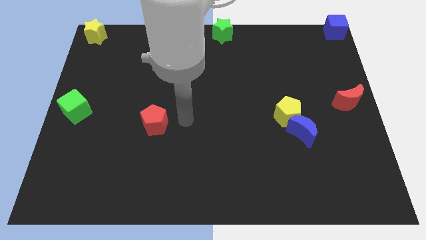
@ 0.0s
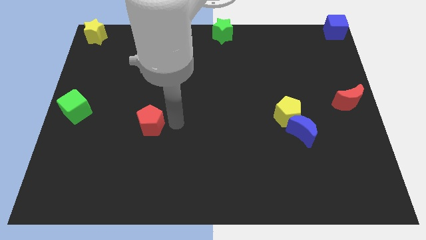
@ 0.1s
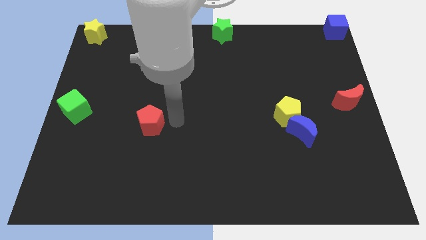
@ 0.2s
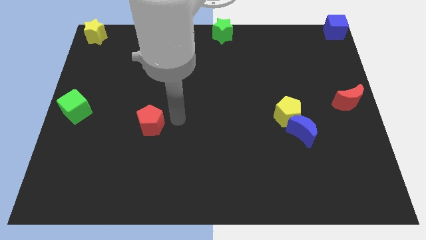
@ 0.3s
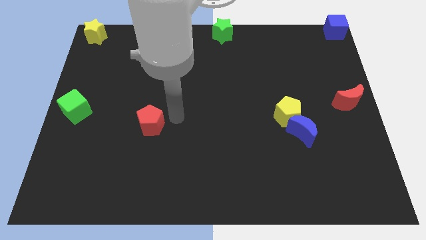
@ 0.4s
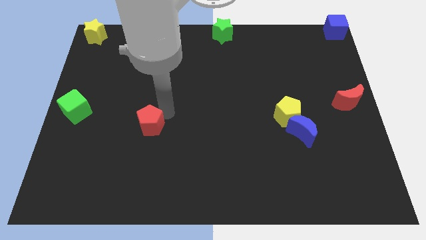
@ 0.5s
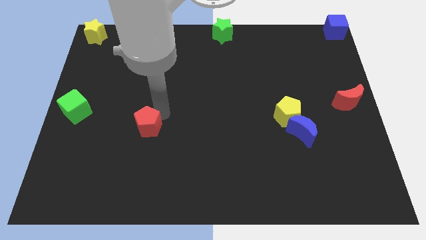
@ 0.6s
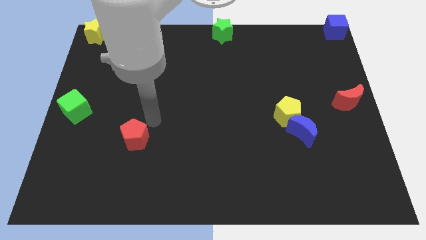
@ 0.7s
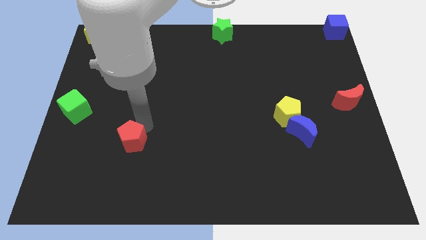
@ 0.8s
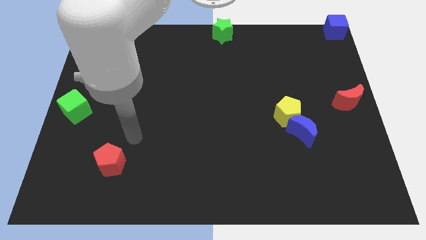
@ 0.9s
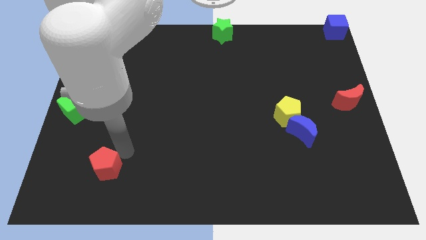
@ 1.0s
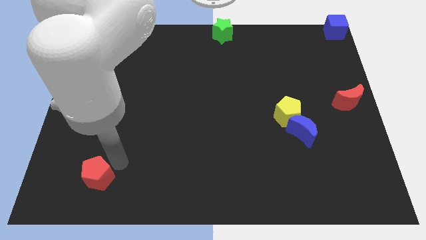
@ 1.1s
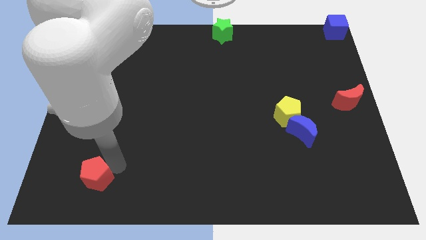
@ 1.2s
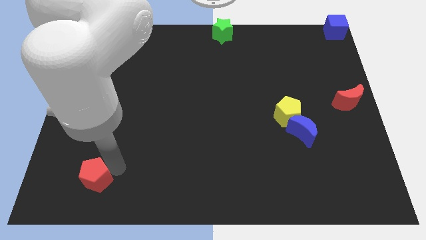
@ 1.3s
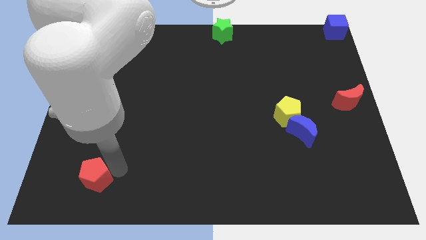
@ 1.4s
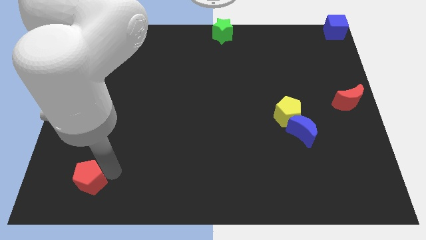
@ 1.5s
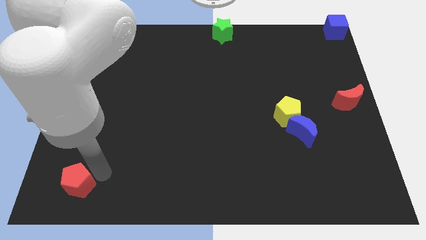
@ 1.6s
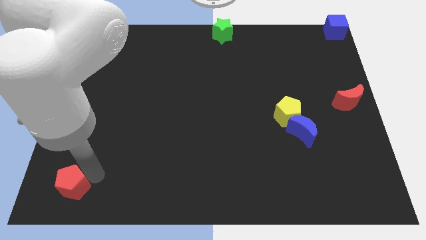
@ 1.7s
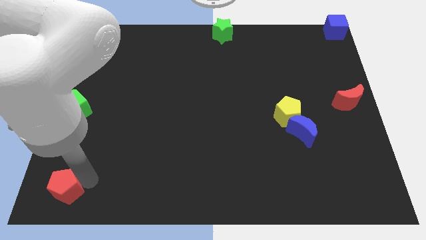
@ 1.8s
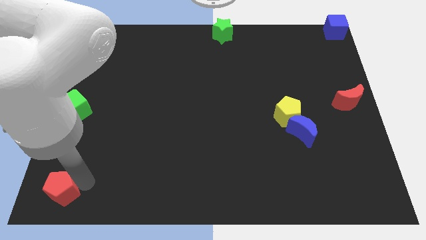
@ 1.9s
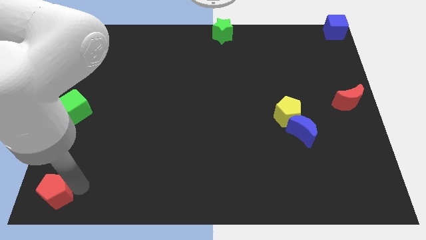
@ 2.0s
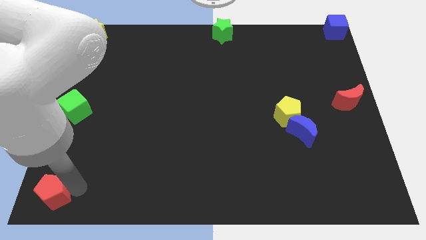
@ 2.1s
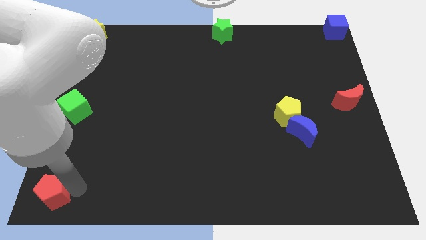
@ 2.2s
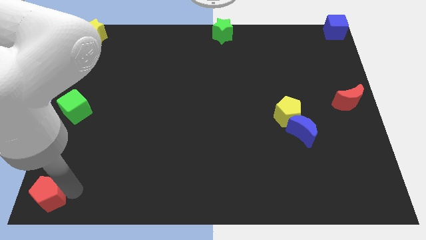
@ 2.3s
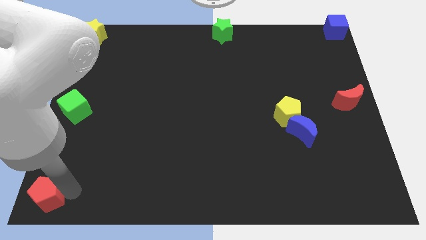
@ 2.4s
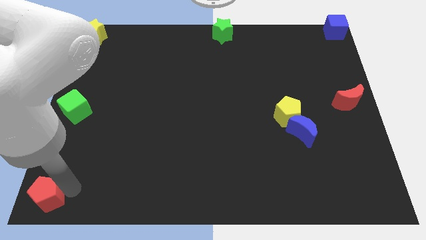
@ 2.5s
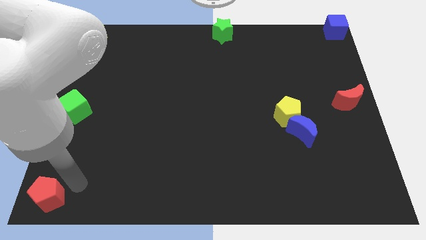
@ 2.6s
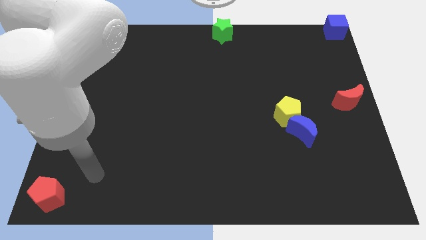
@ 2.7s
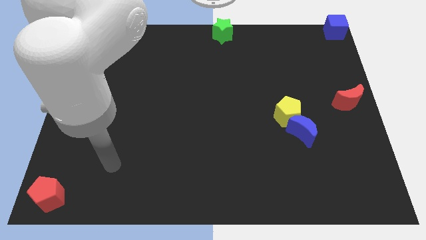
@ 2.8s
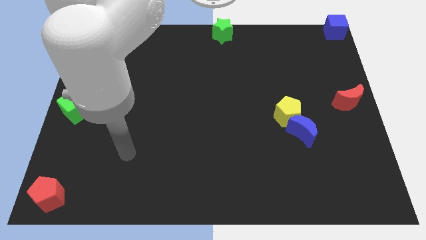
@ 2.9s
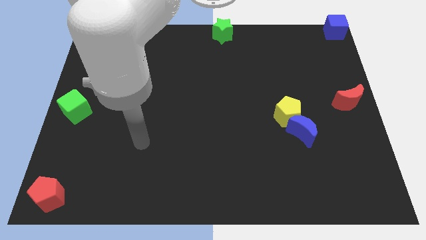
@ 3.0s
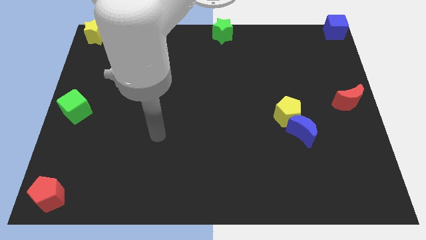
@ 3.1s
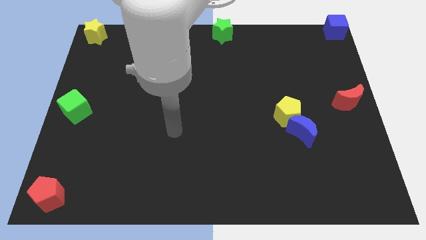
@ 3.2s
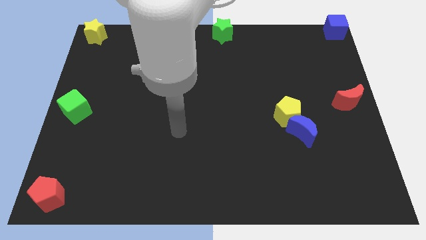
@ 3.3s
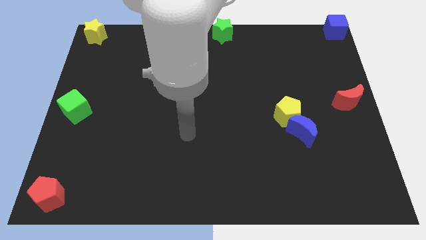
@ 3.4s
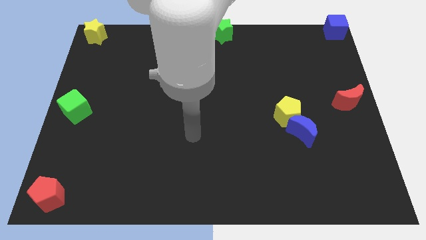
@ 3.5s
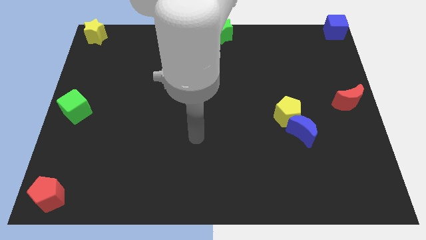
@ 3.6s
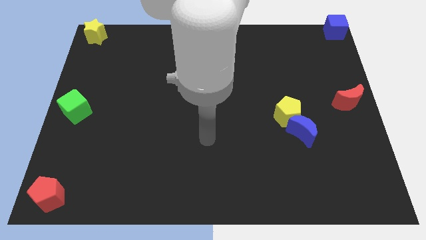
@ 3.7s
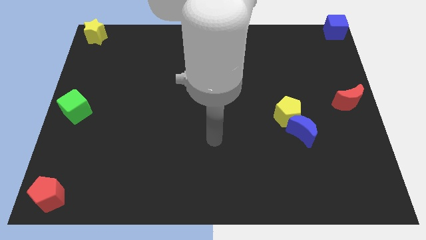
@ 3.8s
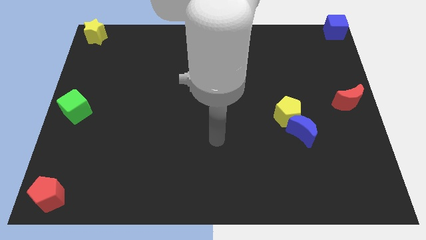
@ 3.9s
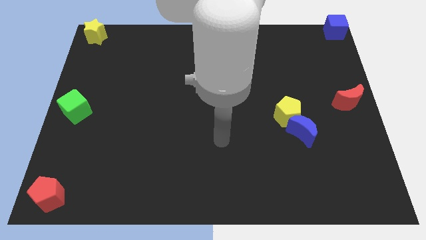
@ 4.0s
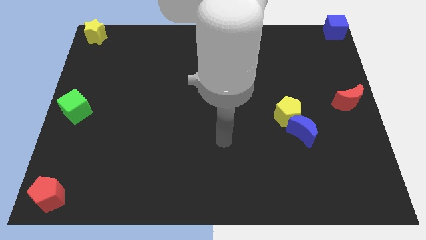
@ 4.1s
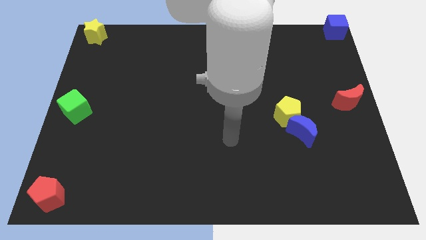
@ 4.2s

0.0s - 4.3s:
place the red pentagon to the bottom left of the board

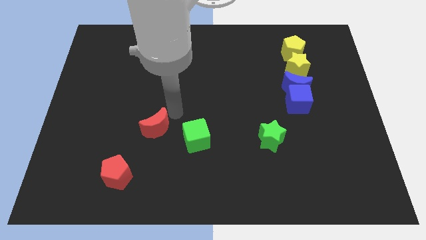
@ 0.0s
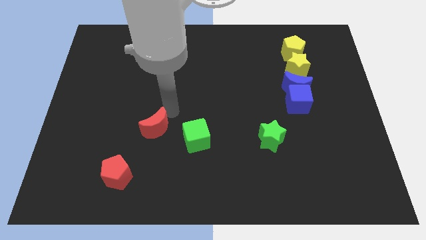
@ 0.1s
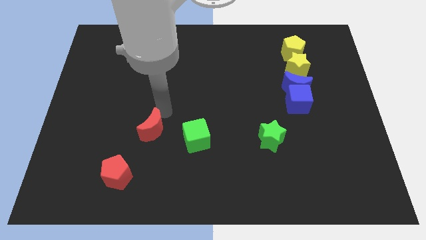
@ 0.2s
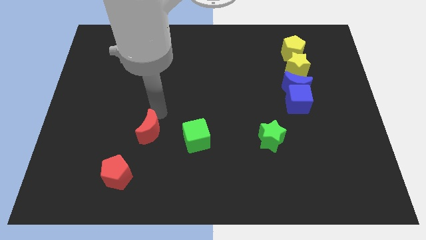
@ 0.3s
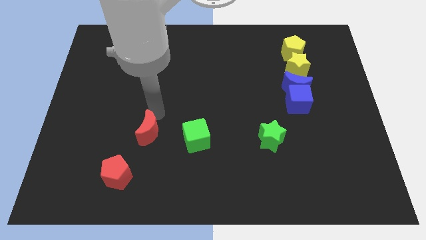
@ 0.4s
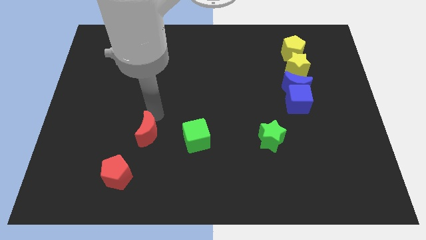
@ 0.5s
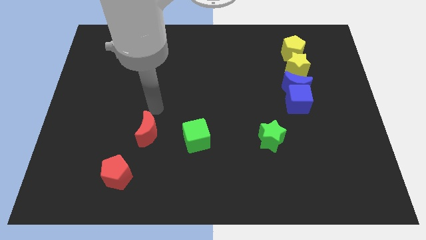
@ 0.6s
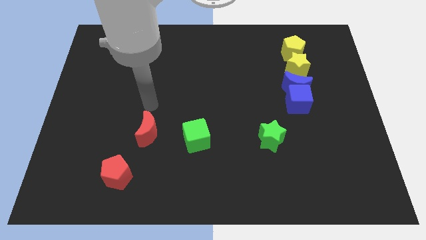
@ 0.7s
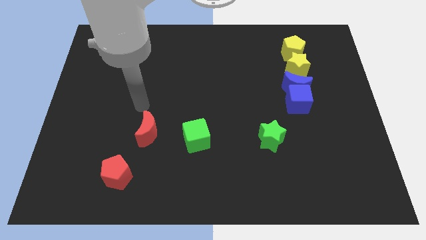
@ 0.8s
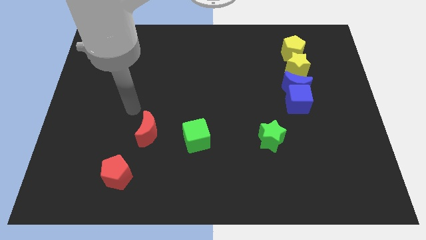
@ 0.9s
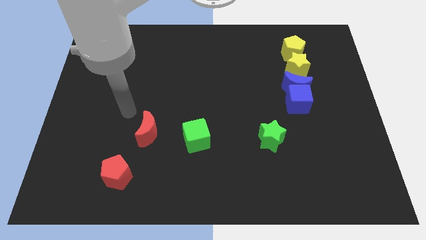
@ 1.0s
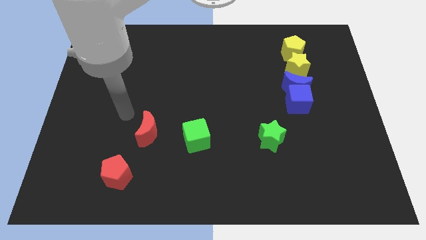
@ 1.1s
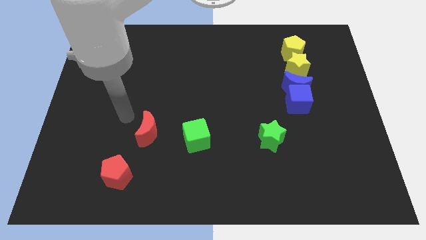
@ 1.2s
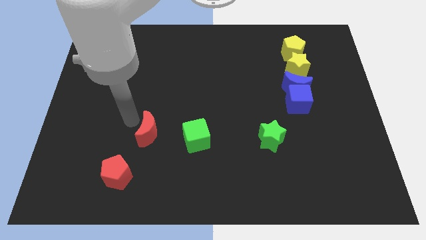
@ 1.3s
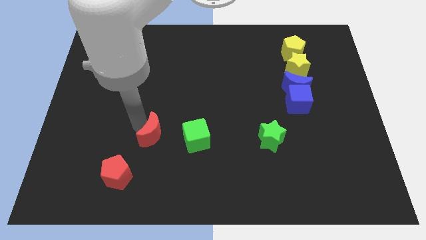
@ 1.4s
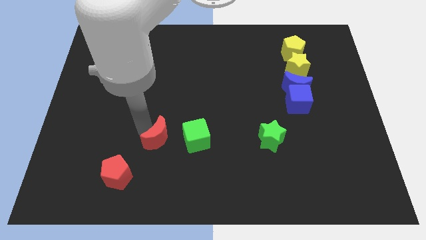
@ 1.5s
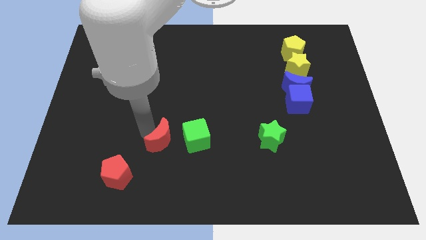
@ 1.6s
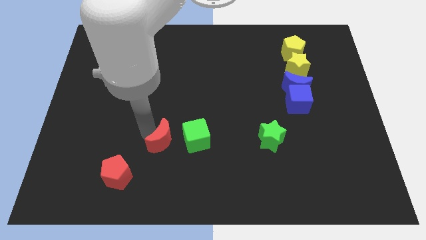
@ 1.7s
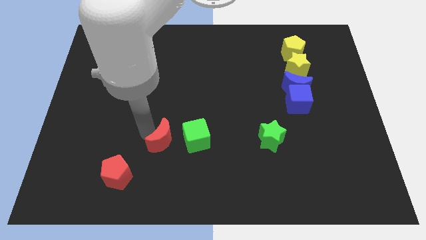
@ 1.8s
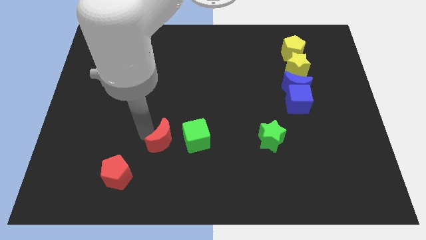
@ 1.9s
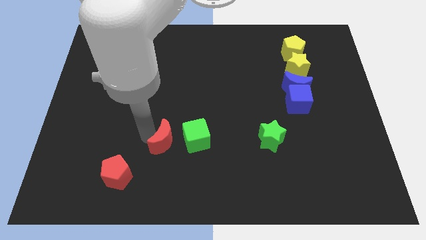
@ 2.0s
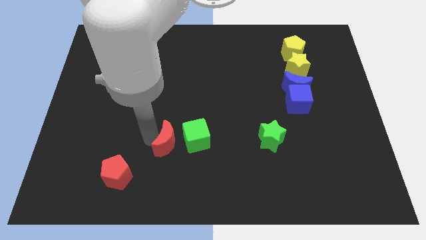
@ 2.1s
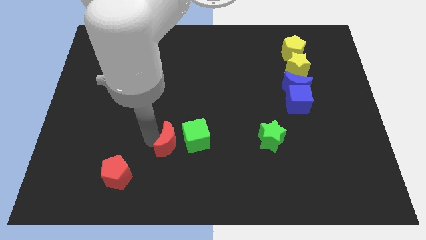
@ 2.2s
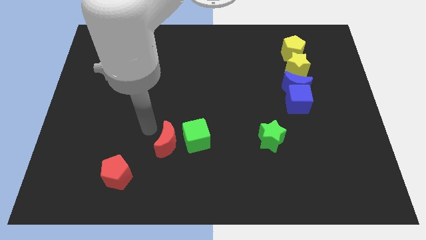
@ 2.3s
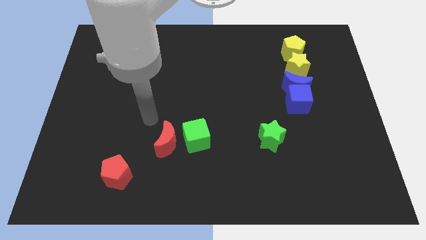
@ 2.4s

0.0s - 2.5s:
place the red moon towards the left side of the green cube

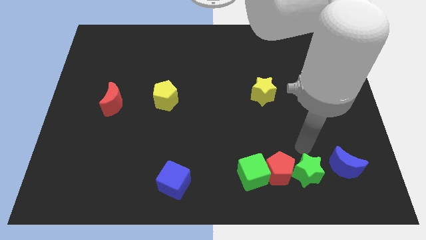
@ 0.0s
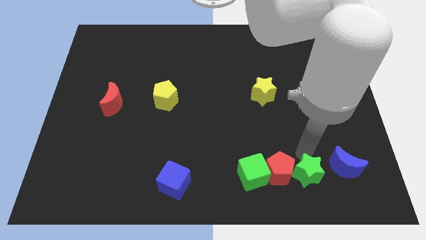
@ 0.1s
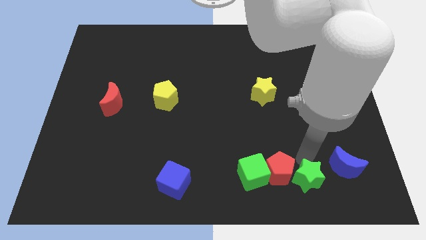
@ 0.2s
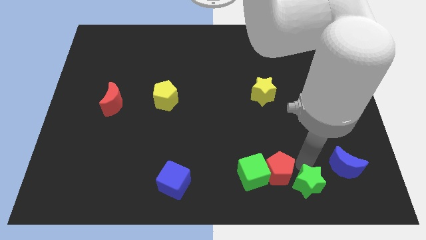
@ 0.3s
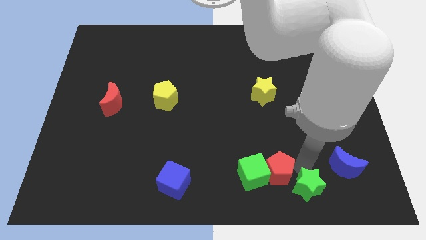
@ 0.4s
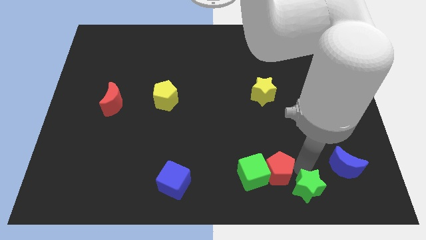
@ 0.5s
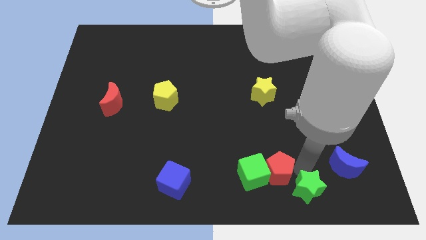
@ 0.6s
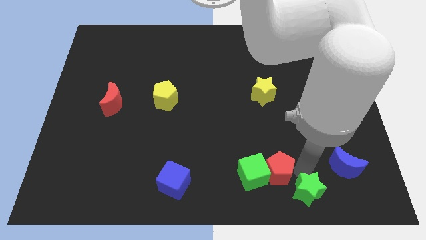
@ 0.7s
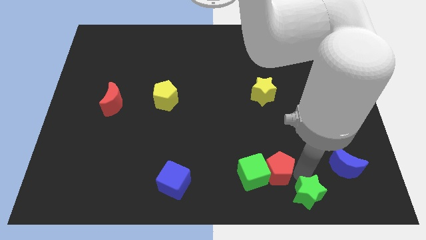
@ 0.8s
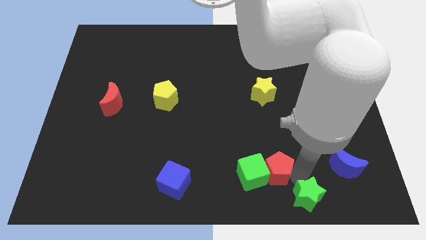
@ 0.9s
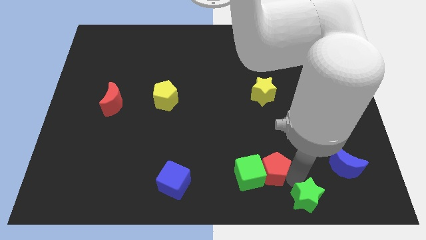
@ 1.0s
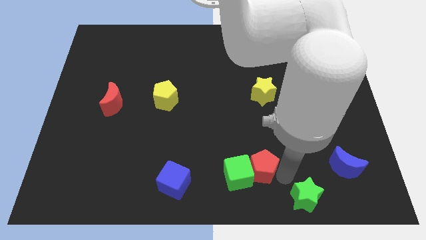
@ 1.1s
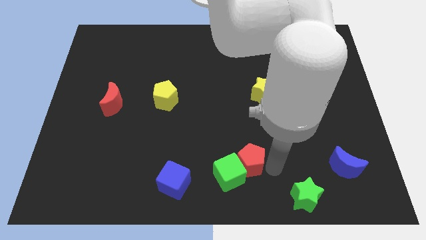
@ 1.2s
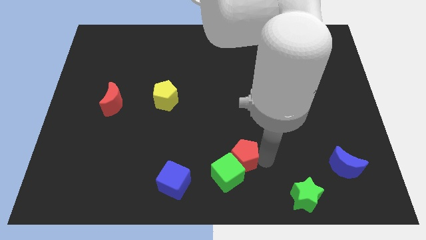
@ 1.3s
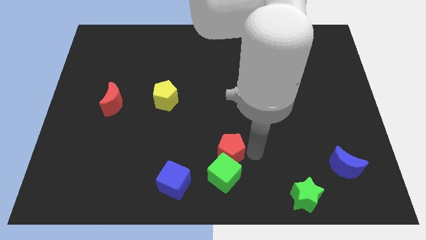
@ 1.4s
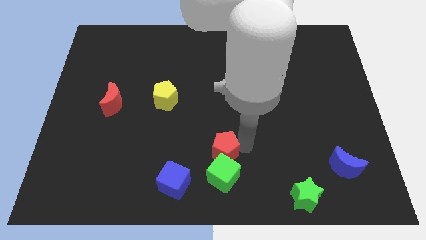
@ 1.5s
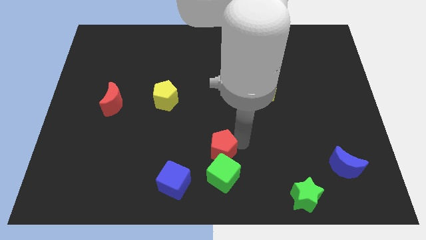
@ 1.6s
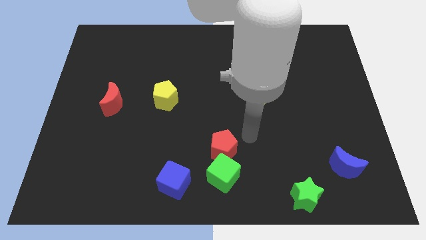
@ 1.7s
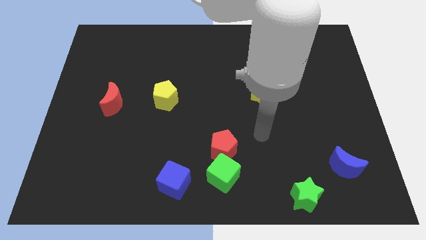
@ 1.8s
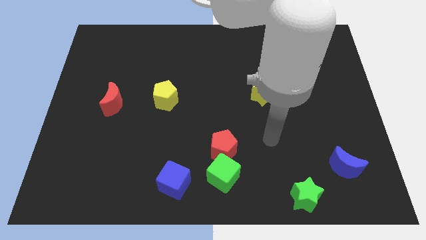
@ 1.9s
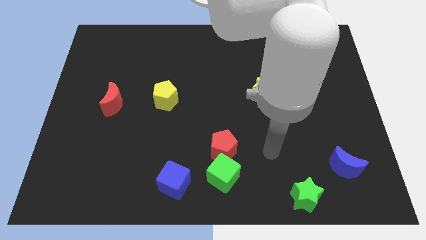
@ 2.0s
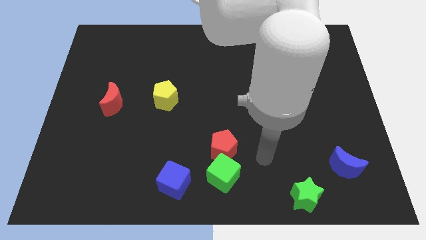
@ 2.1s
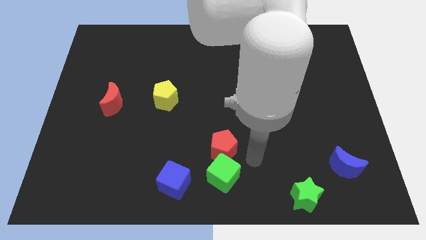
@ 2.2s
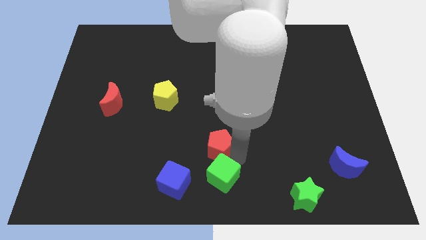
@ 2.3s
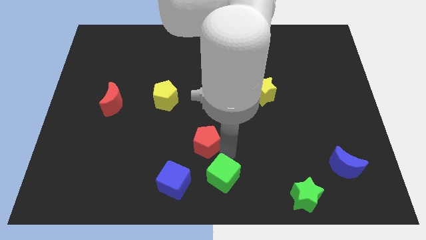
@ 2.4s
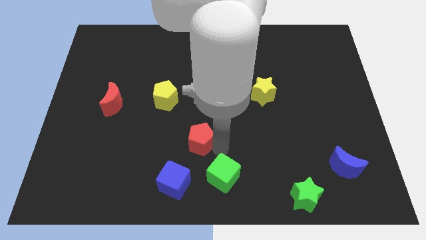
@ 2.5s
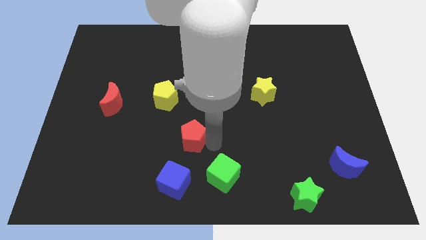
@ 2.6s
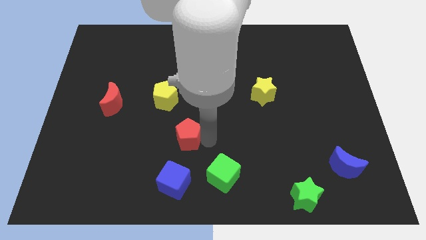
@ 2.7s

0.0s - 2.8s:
move the red pentagon in between the yellow pentagon and green cube
